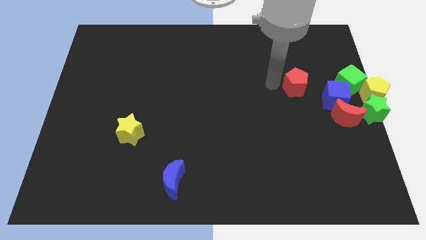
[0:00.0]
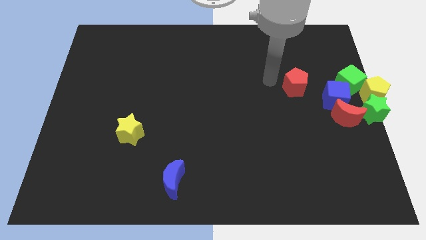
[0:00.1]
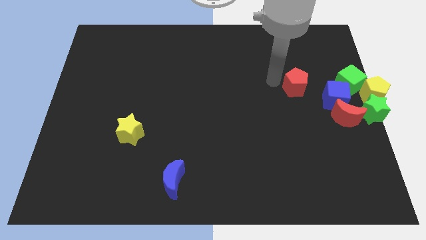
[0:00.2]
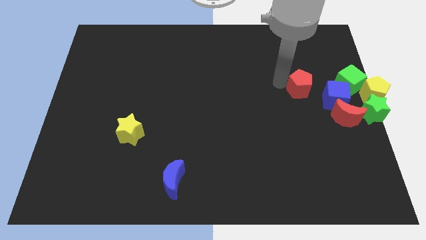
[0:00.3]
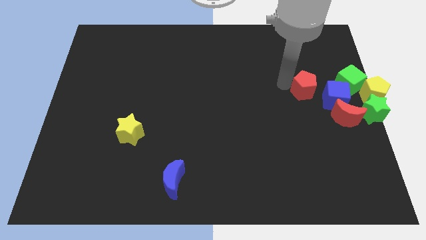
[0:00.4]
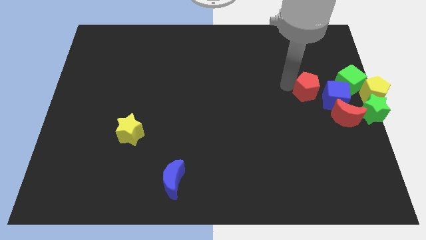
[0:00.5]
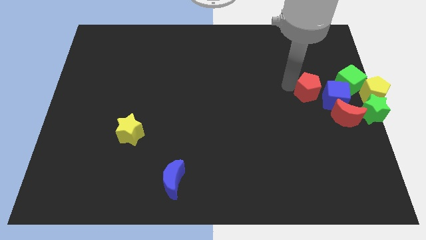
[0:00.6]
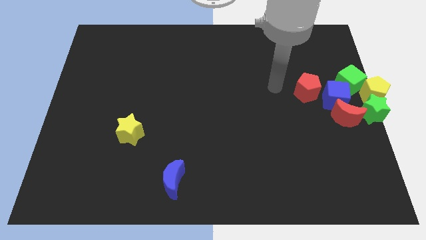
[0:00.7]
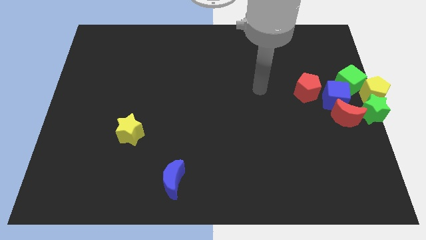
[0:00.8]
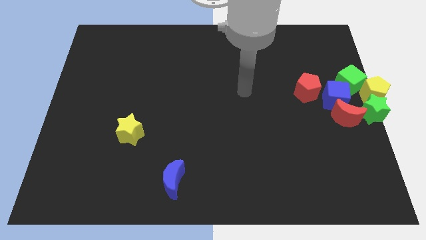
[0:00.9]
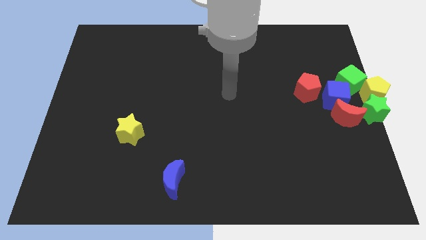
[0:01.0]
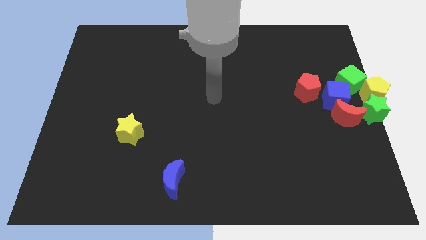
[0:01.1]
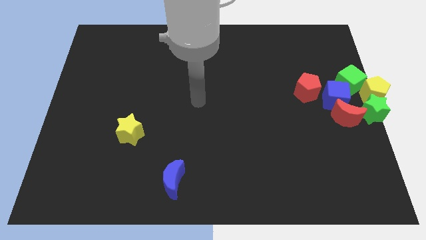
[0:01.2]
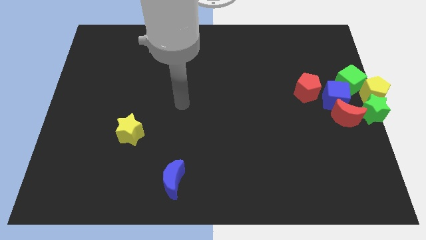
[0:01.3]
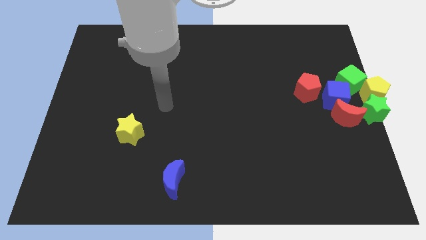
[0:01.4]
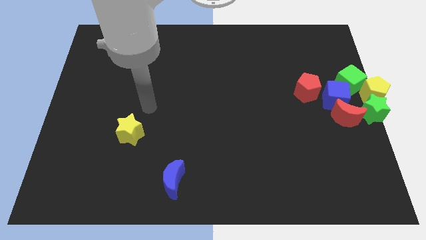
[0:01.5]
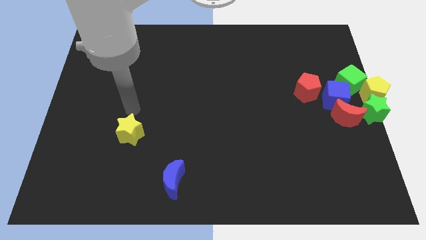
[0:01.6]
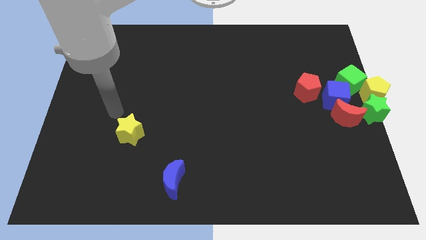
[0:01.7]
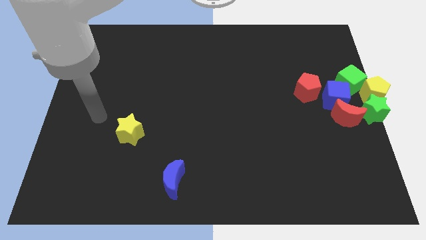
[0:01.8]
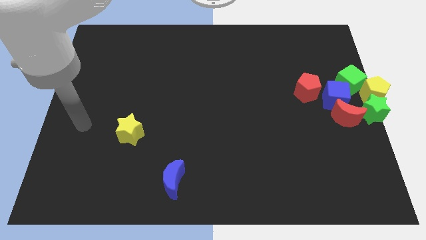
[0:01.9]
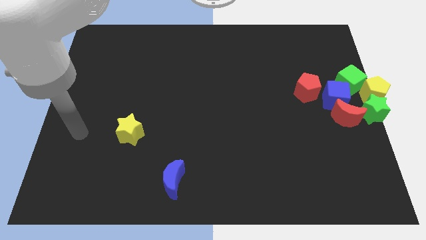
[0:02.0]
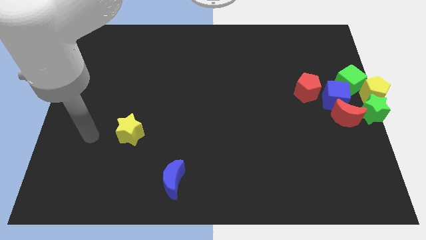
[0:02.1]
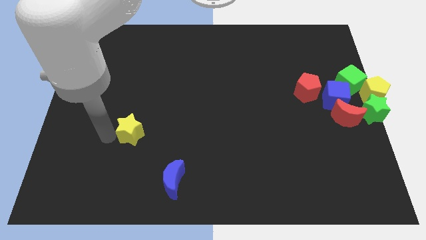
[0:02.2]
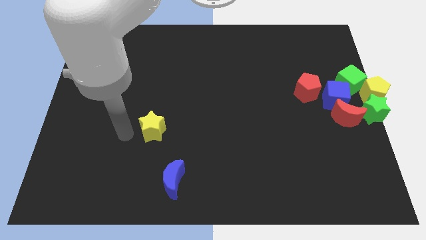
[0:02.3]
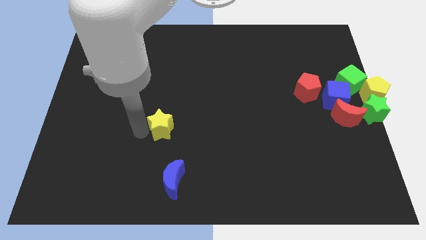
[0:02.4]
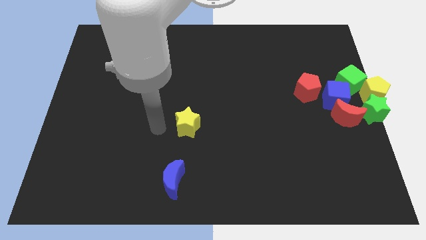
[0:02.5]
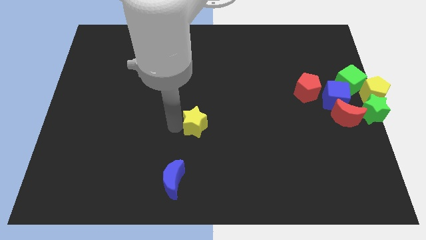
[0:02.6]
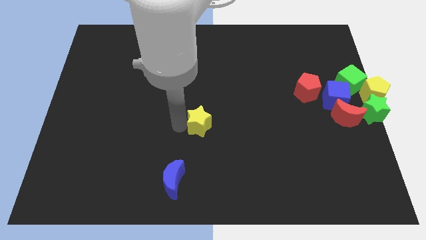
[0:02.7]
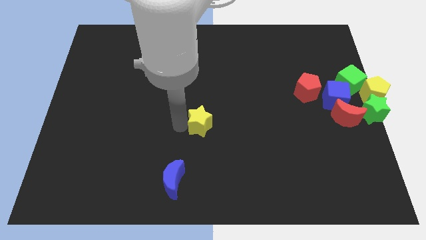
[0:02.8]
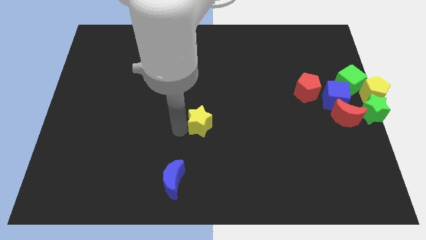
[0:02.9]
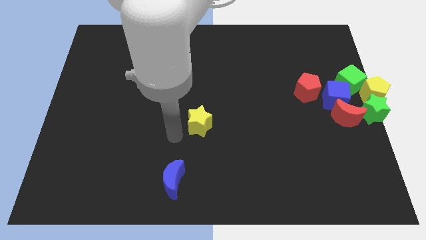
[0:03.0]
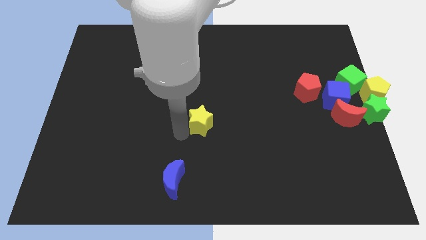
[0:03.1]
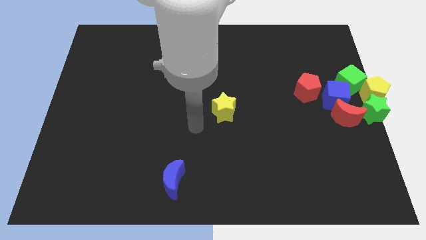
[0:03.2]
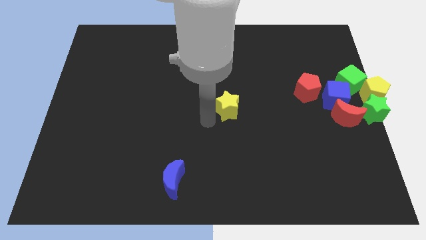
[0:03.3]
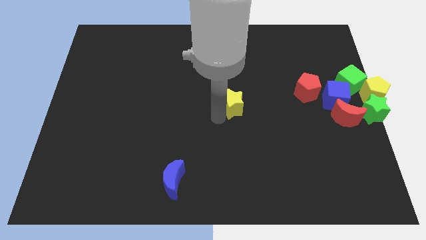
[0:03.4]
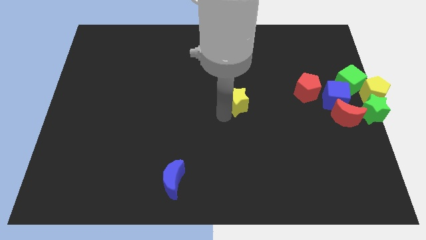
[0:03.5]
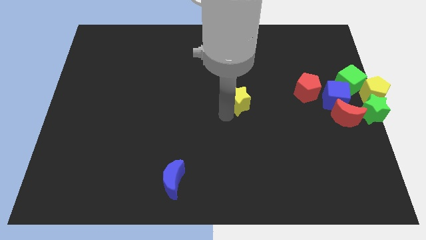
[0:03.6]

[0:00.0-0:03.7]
push the yellow star towards the red pentagon

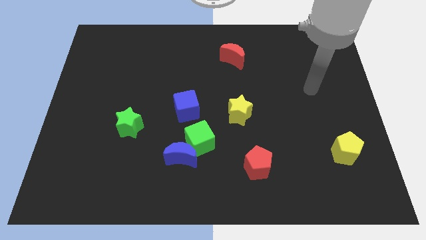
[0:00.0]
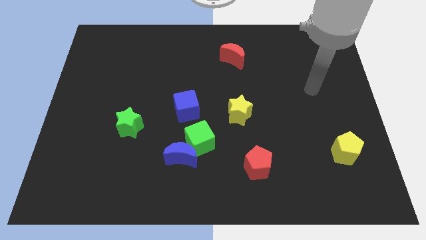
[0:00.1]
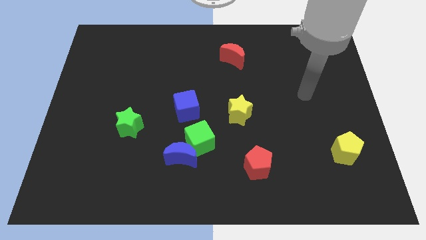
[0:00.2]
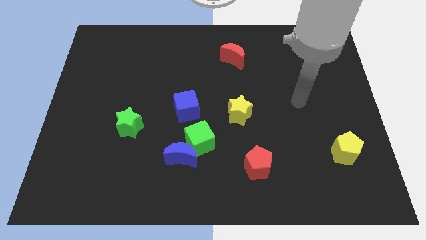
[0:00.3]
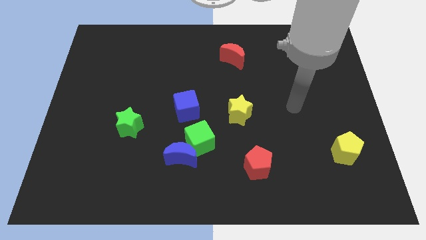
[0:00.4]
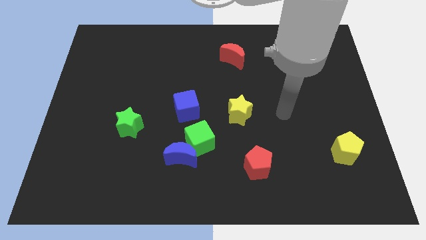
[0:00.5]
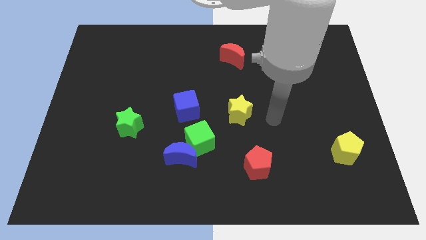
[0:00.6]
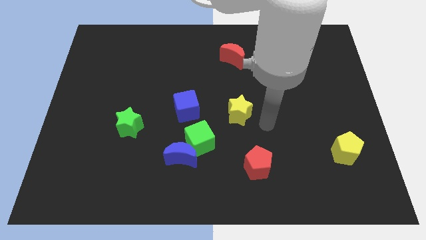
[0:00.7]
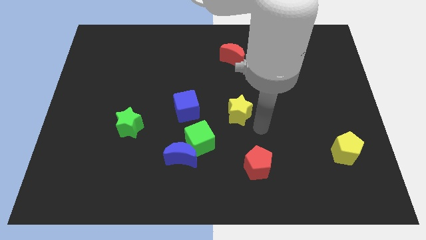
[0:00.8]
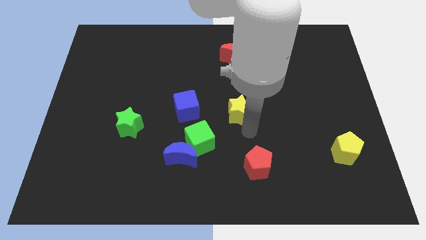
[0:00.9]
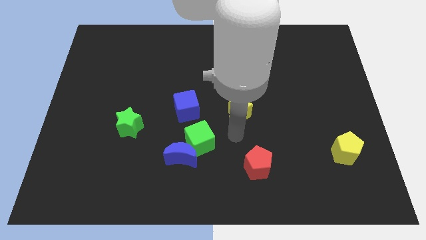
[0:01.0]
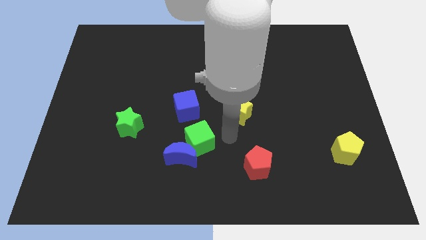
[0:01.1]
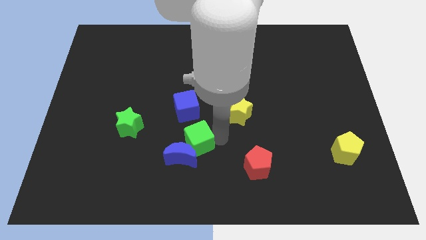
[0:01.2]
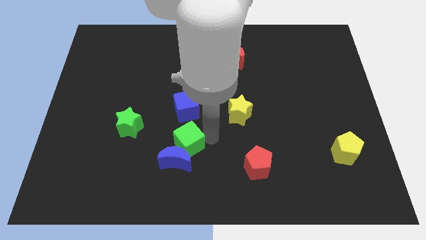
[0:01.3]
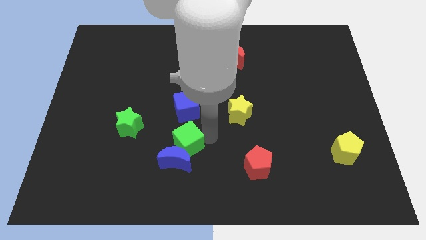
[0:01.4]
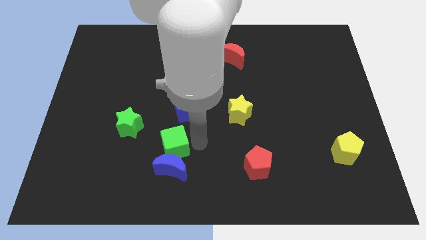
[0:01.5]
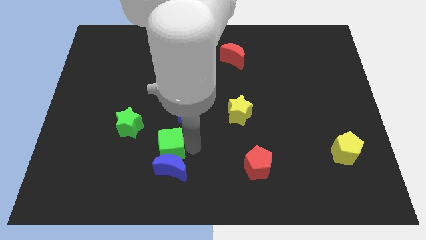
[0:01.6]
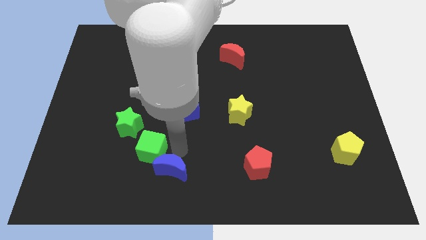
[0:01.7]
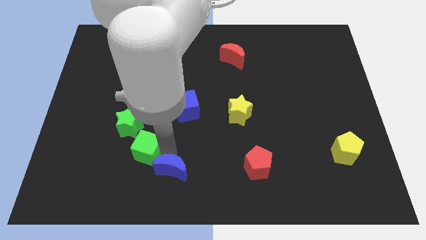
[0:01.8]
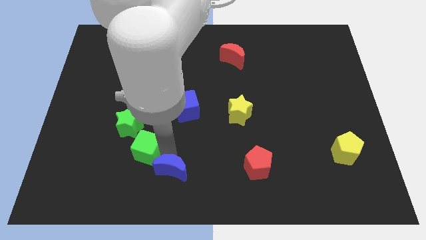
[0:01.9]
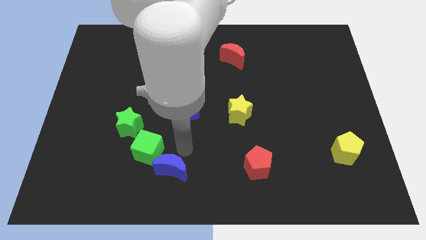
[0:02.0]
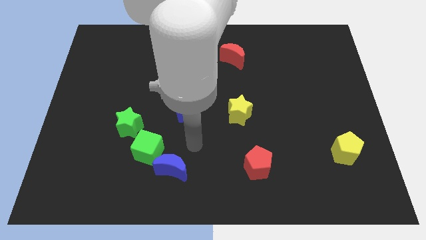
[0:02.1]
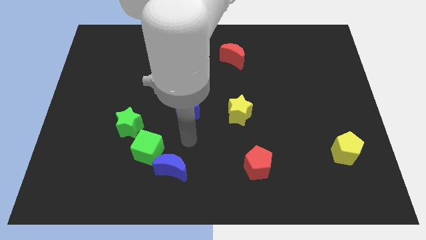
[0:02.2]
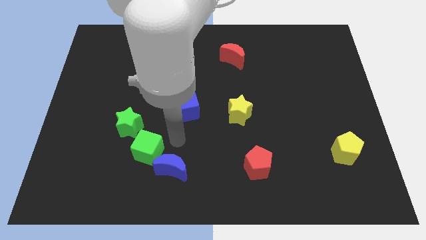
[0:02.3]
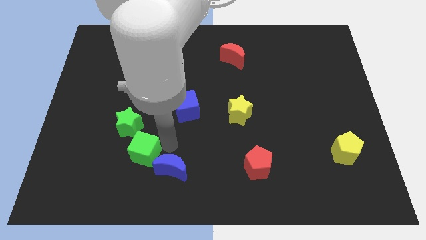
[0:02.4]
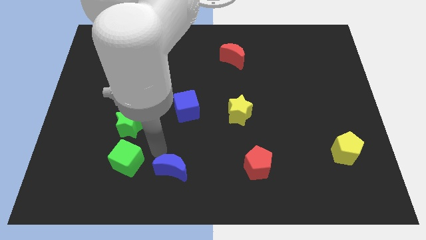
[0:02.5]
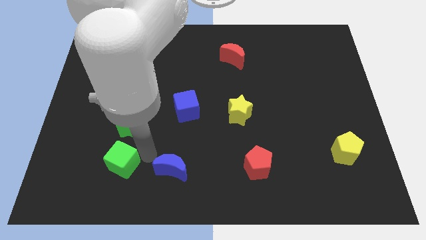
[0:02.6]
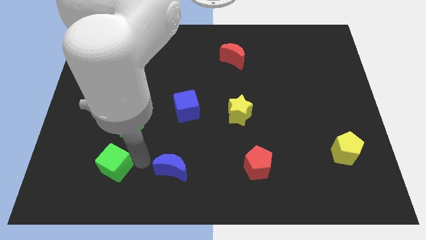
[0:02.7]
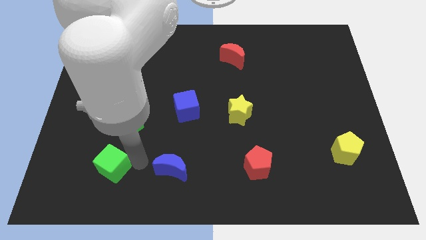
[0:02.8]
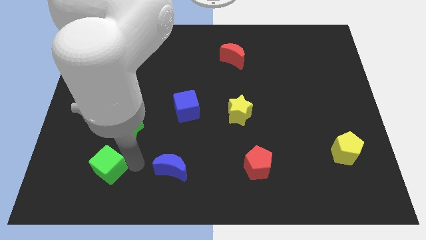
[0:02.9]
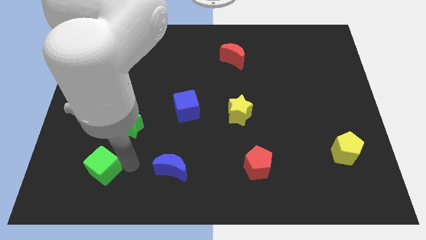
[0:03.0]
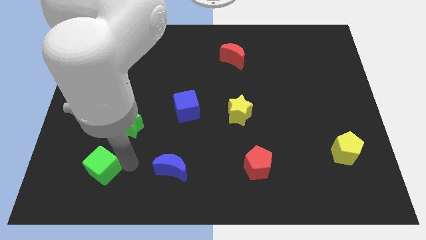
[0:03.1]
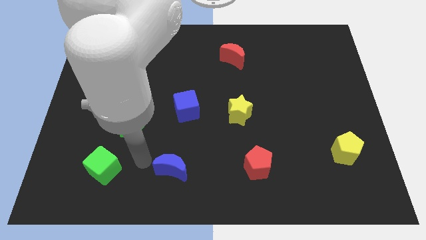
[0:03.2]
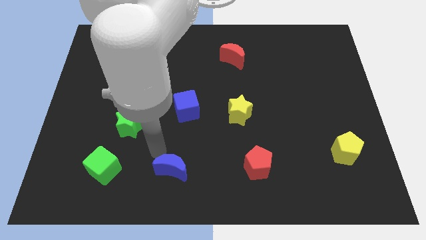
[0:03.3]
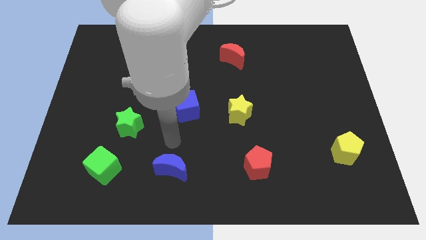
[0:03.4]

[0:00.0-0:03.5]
push the green cube to the left of the blue moon

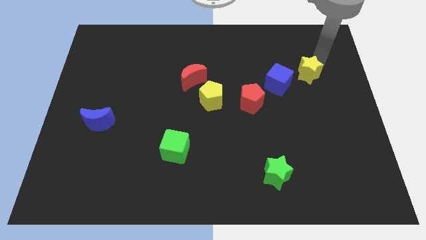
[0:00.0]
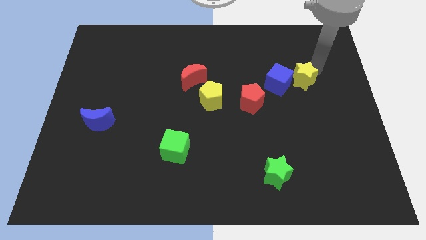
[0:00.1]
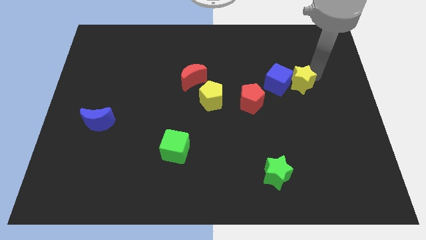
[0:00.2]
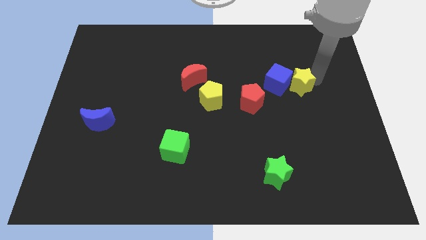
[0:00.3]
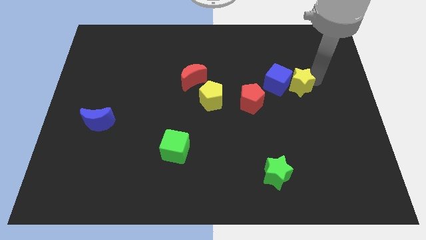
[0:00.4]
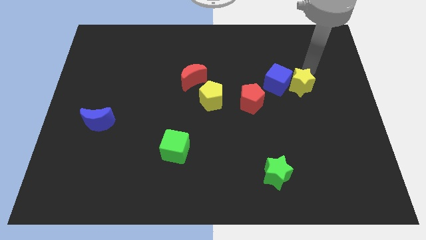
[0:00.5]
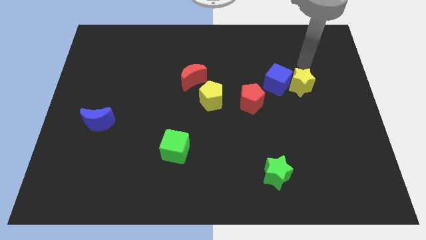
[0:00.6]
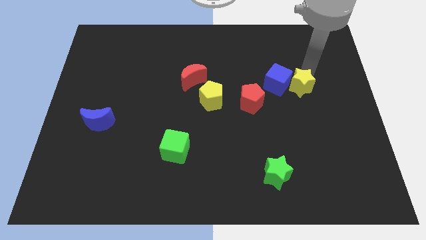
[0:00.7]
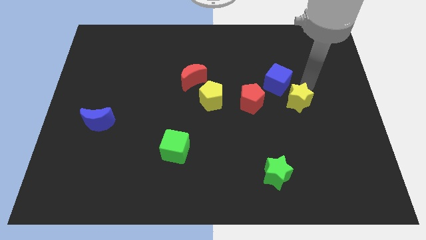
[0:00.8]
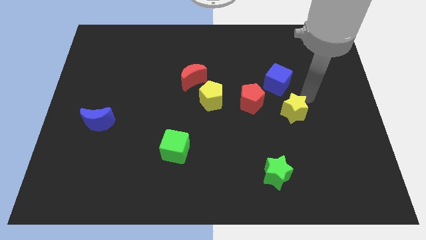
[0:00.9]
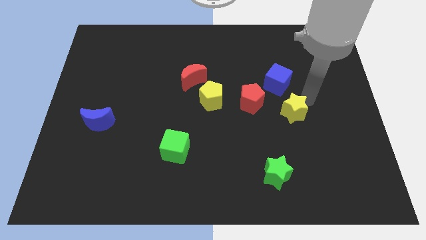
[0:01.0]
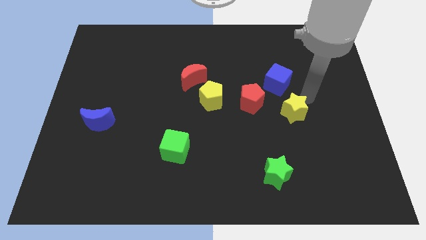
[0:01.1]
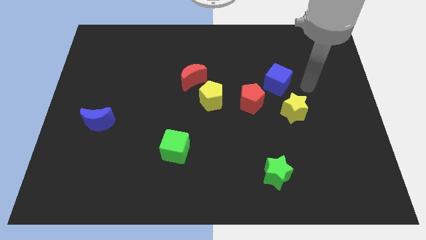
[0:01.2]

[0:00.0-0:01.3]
push yellow star to the bottom of the blue cube

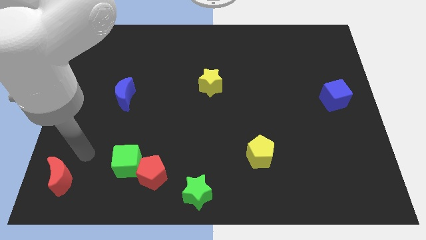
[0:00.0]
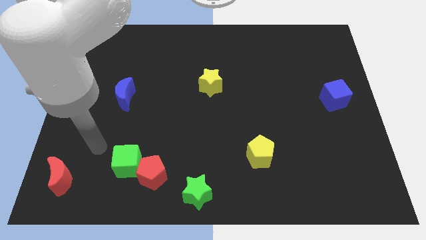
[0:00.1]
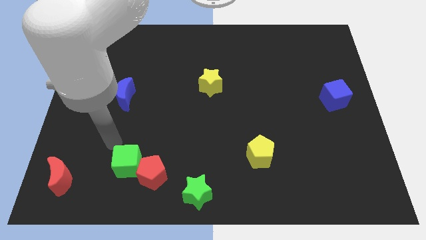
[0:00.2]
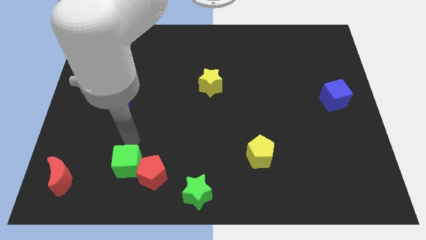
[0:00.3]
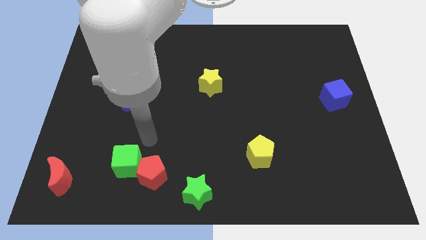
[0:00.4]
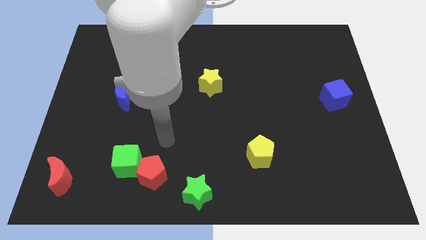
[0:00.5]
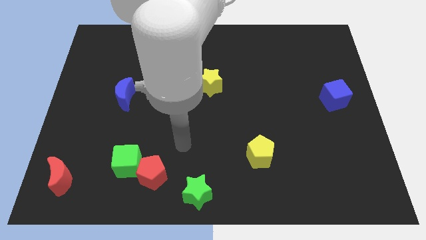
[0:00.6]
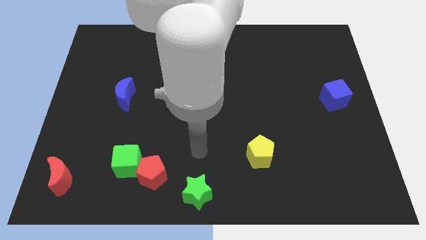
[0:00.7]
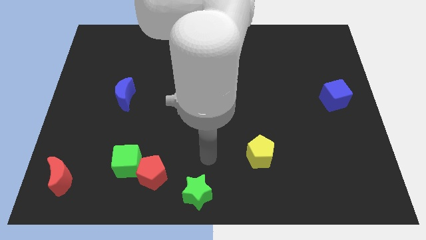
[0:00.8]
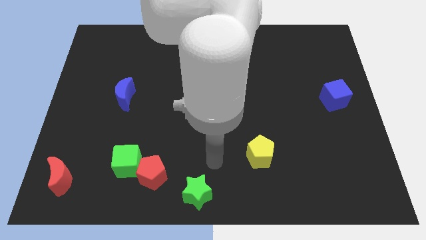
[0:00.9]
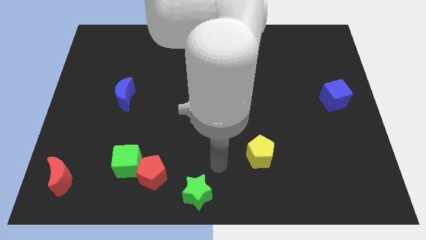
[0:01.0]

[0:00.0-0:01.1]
move your arm towards the top of the green star
